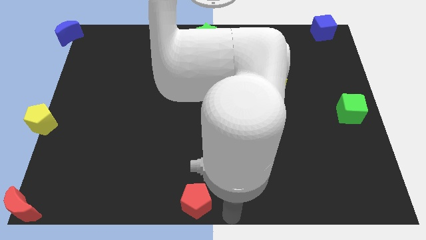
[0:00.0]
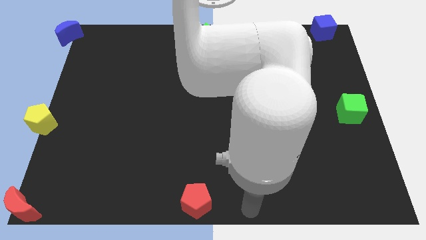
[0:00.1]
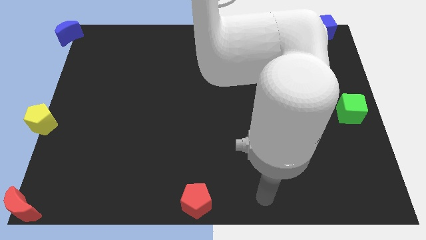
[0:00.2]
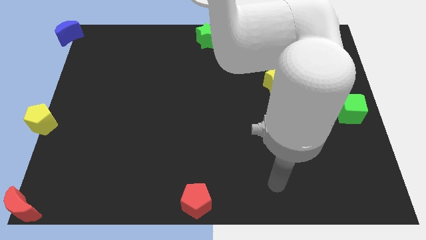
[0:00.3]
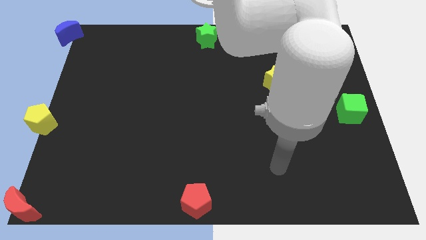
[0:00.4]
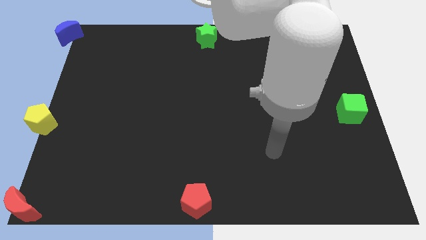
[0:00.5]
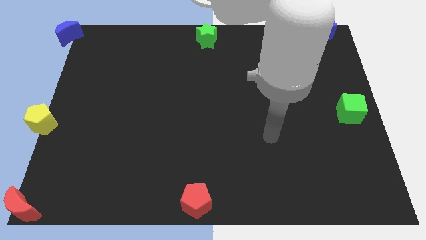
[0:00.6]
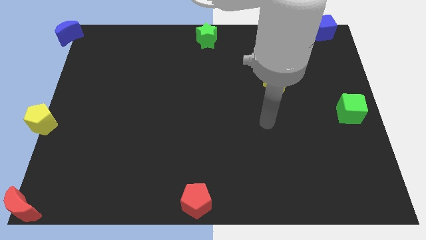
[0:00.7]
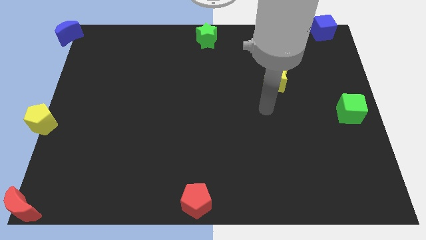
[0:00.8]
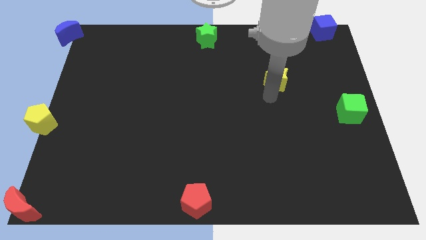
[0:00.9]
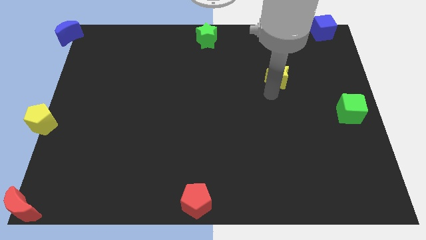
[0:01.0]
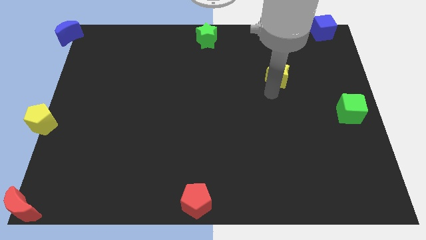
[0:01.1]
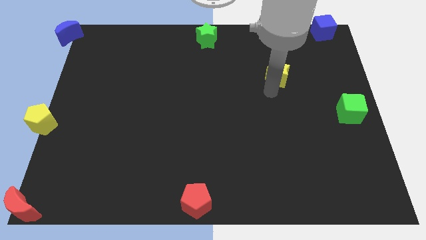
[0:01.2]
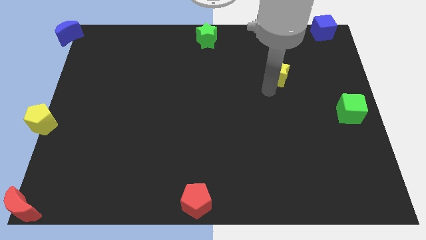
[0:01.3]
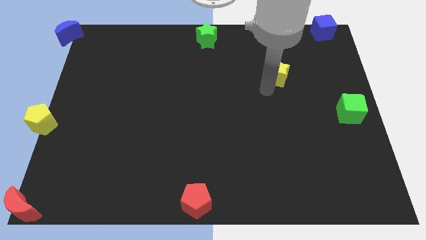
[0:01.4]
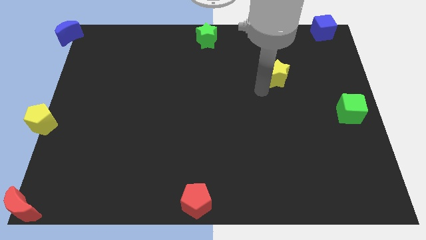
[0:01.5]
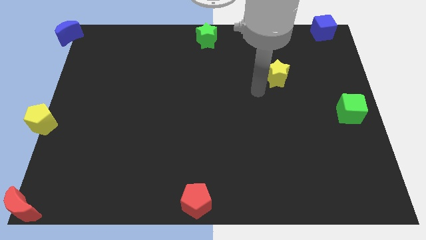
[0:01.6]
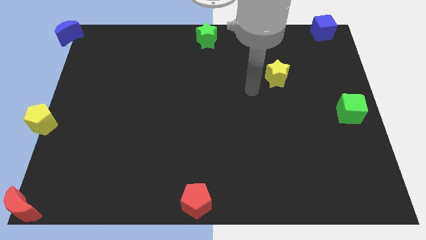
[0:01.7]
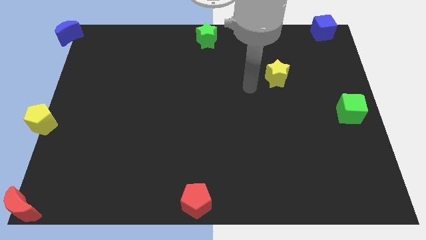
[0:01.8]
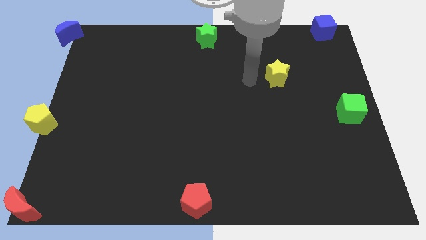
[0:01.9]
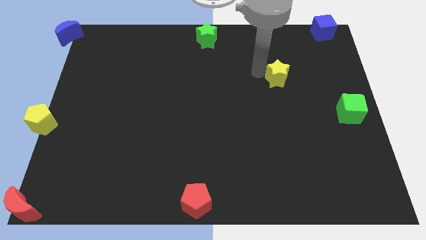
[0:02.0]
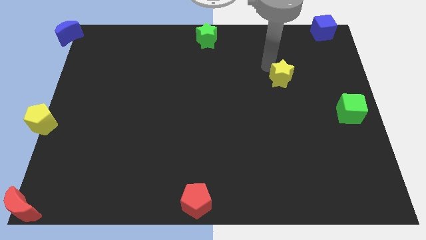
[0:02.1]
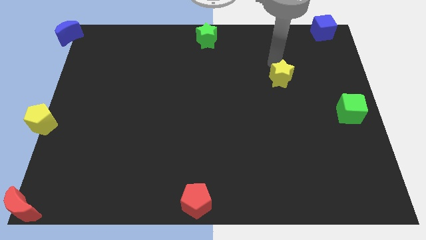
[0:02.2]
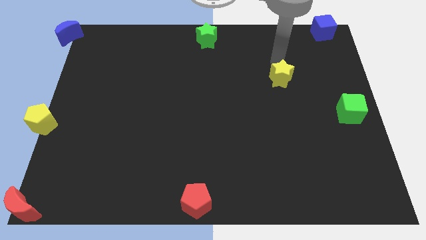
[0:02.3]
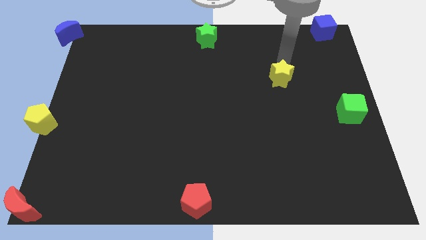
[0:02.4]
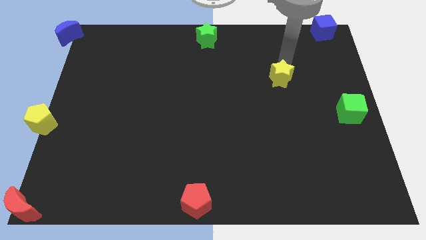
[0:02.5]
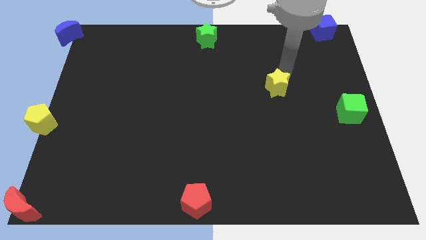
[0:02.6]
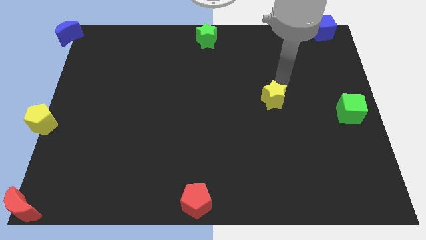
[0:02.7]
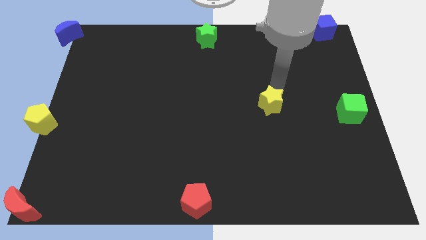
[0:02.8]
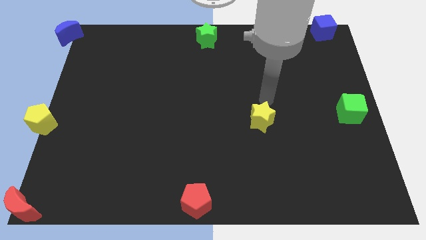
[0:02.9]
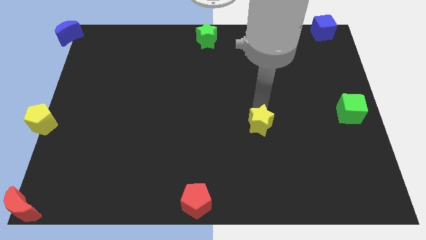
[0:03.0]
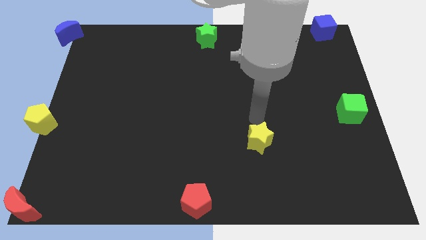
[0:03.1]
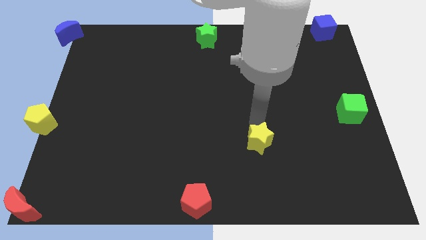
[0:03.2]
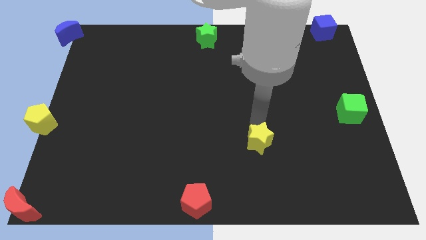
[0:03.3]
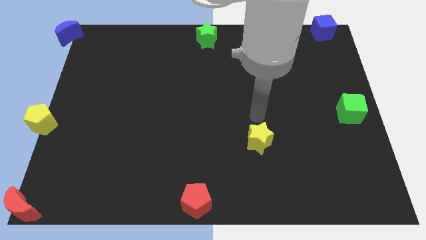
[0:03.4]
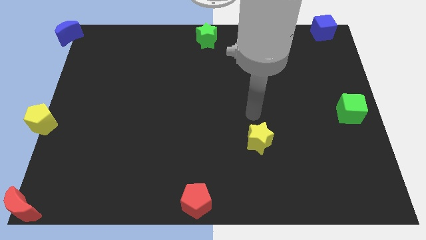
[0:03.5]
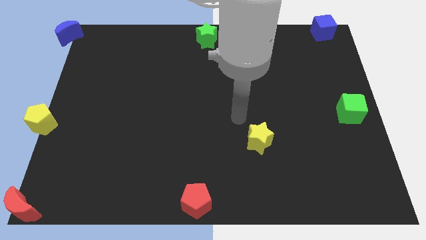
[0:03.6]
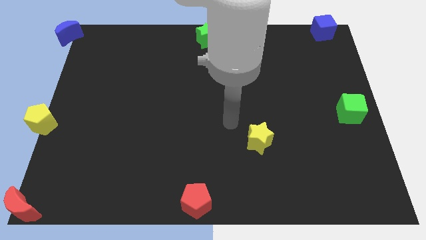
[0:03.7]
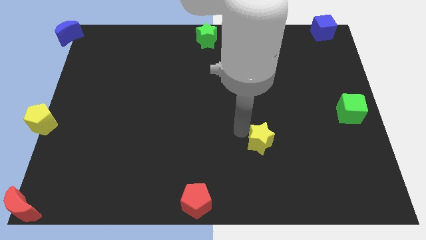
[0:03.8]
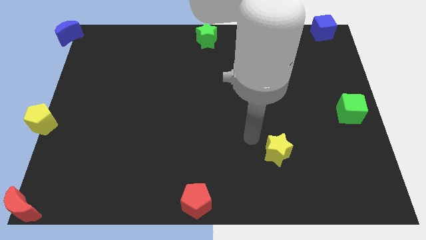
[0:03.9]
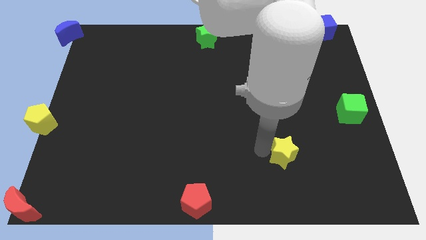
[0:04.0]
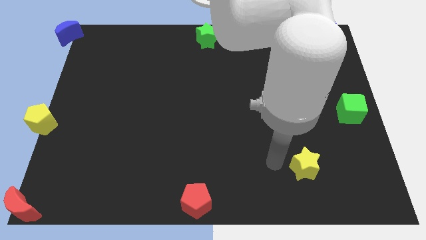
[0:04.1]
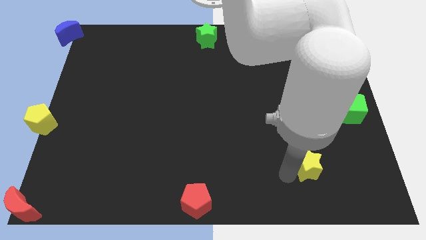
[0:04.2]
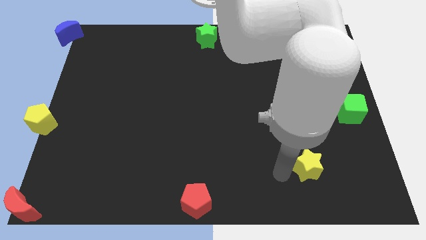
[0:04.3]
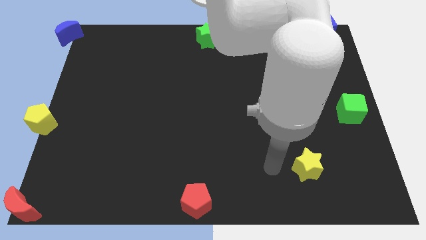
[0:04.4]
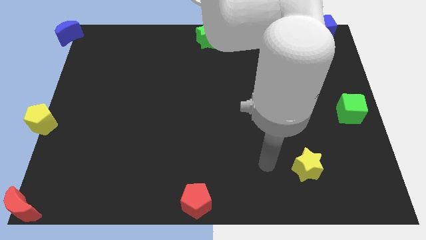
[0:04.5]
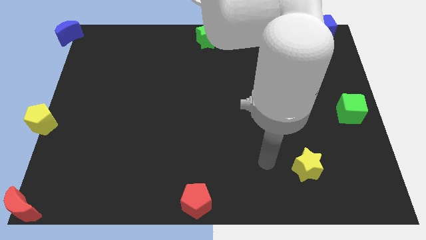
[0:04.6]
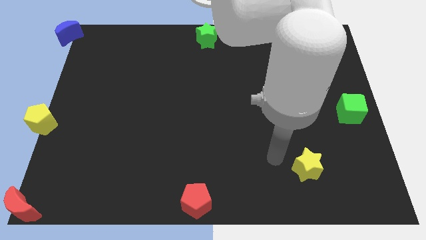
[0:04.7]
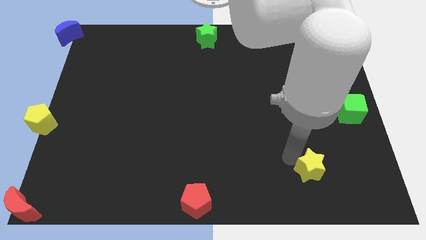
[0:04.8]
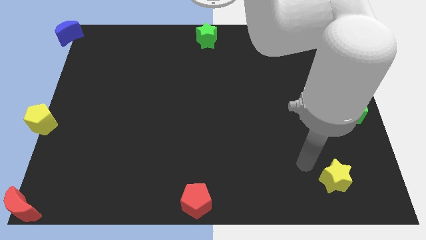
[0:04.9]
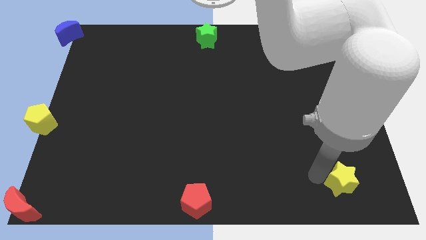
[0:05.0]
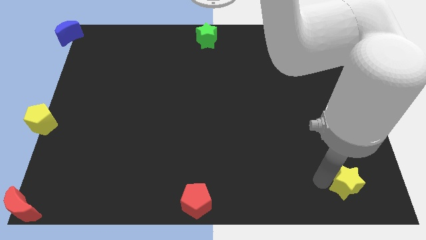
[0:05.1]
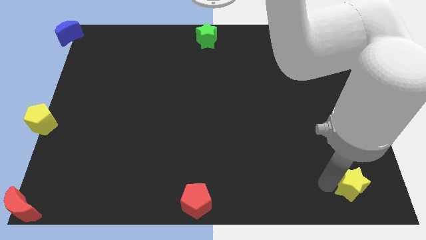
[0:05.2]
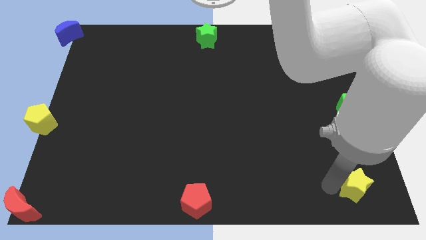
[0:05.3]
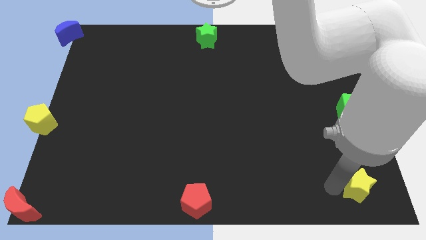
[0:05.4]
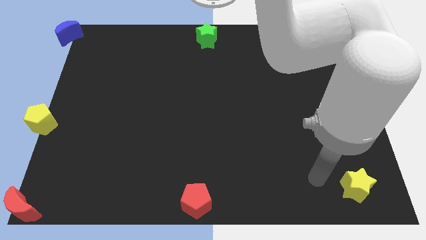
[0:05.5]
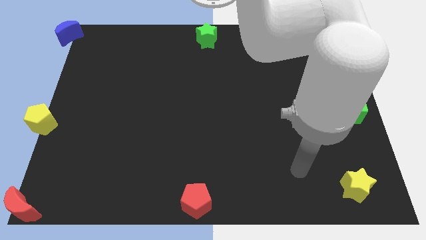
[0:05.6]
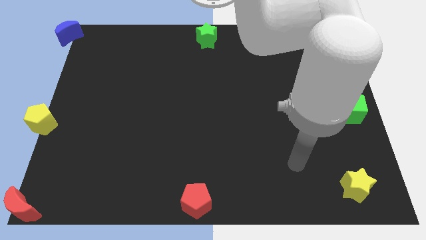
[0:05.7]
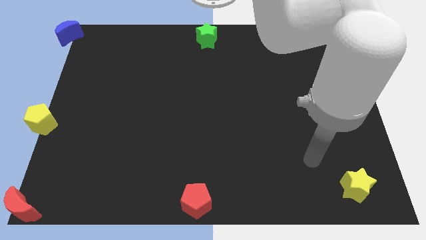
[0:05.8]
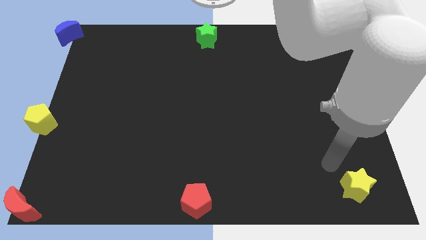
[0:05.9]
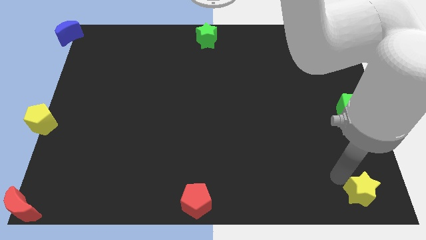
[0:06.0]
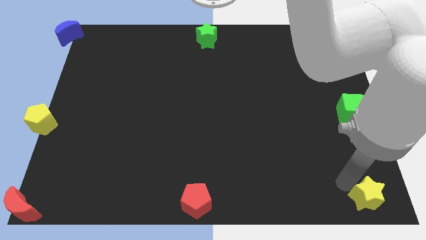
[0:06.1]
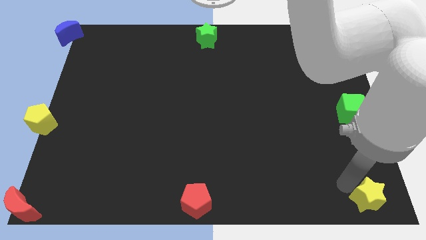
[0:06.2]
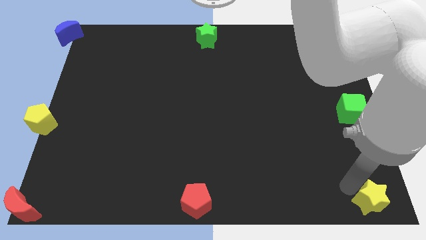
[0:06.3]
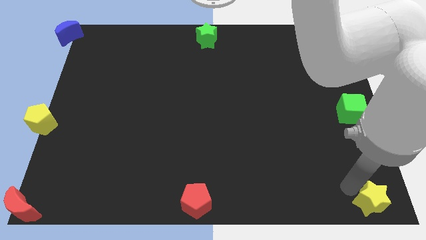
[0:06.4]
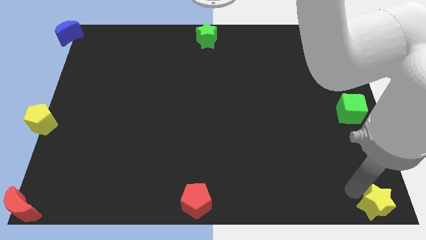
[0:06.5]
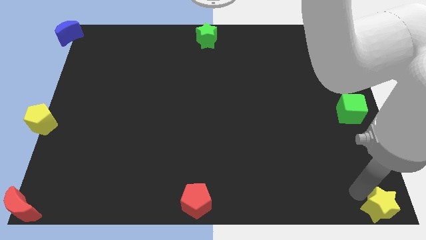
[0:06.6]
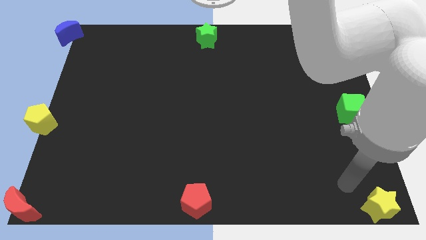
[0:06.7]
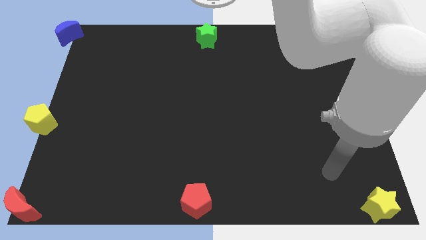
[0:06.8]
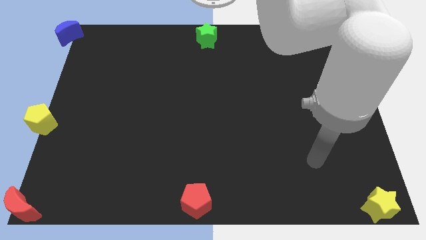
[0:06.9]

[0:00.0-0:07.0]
push the yellow star to the bottom right of the board

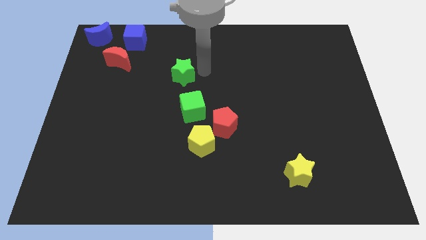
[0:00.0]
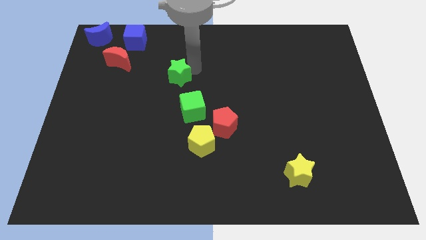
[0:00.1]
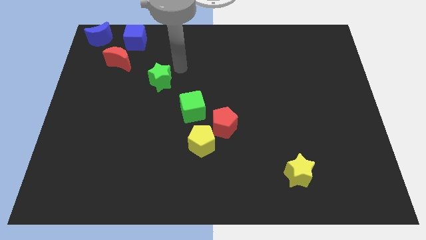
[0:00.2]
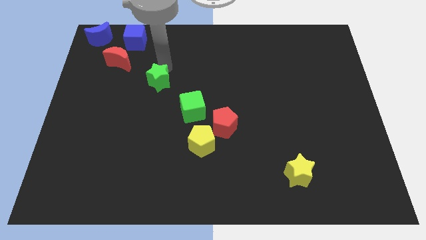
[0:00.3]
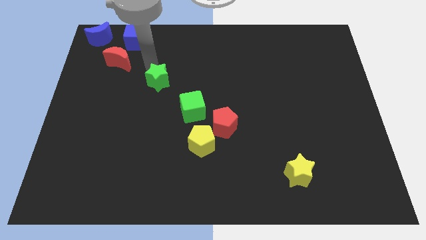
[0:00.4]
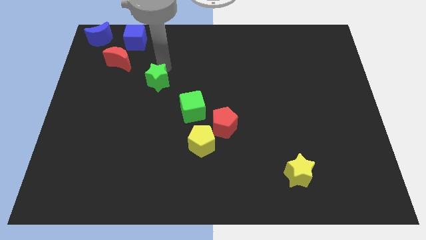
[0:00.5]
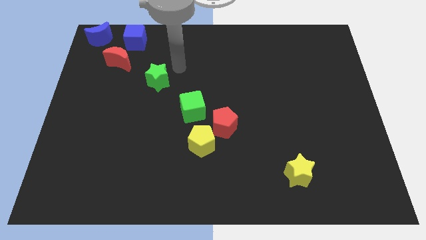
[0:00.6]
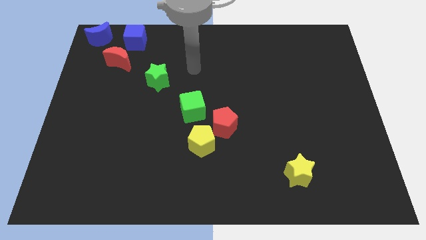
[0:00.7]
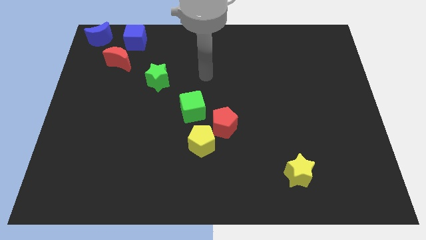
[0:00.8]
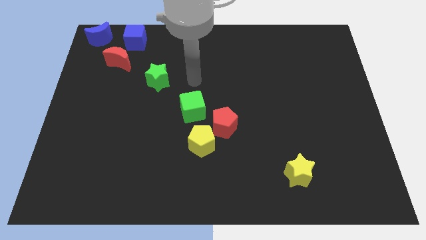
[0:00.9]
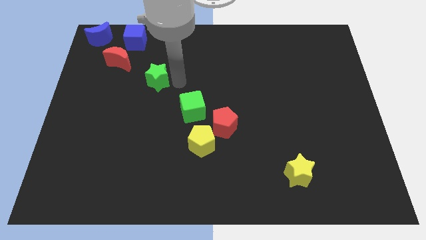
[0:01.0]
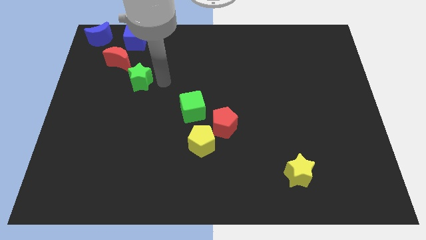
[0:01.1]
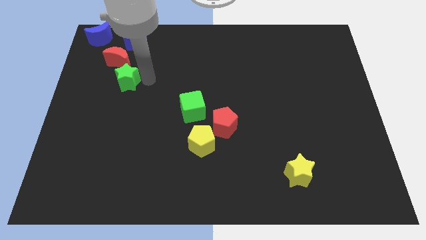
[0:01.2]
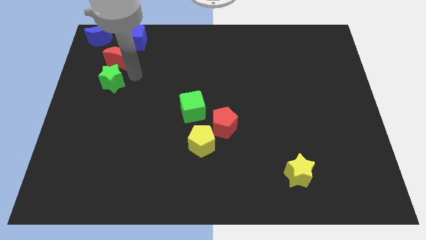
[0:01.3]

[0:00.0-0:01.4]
push green star below red crescent

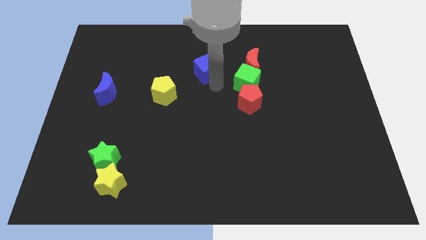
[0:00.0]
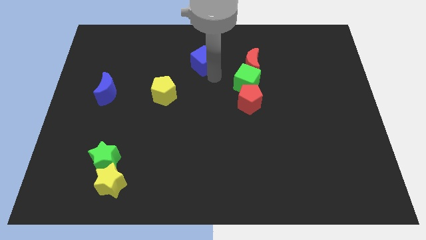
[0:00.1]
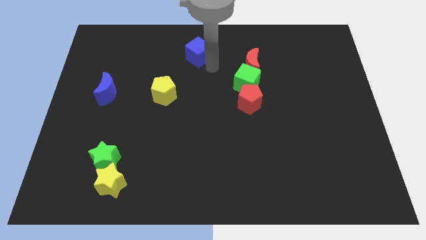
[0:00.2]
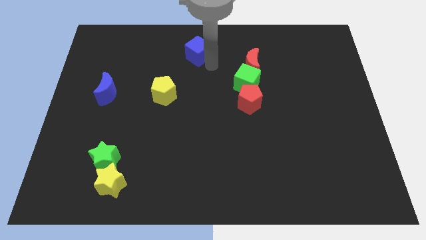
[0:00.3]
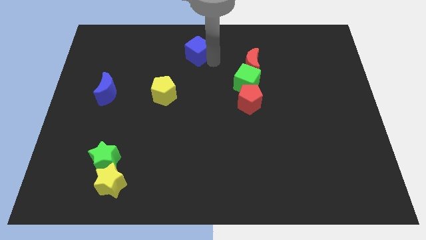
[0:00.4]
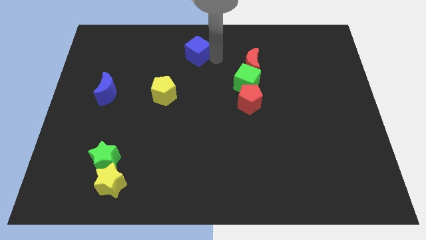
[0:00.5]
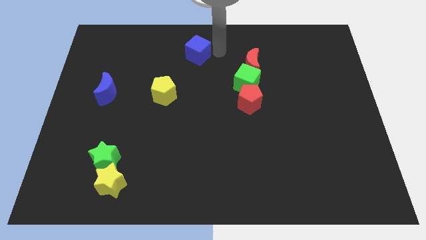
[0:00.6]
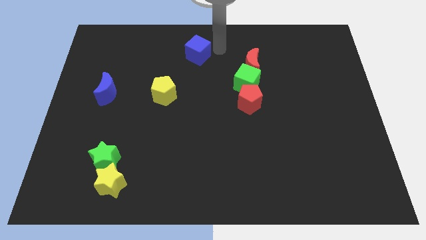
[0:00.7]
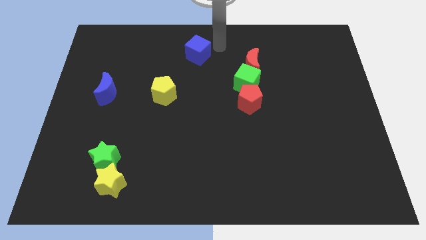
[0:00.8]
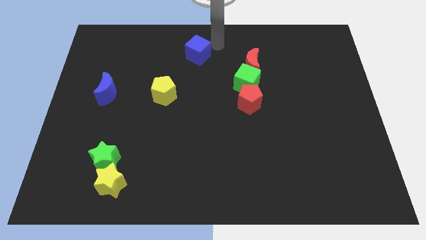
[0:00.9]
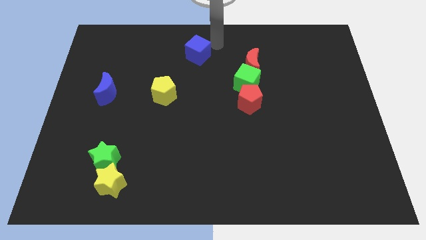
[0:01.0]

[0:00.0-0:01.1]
push blue cube towards top center
